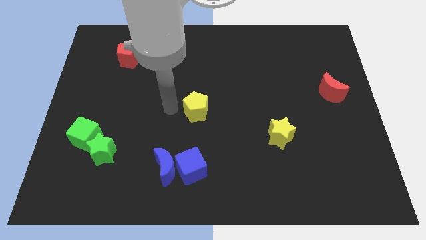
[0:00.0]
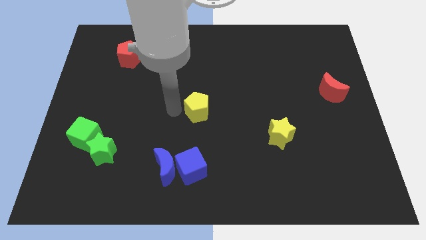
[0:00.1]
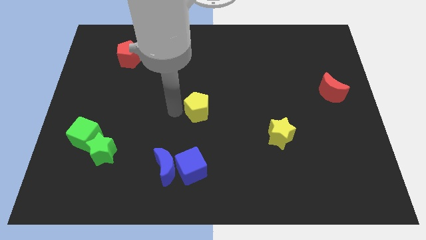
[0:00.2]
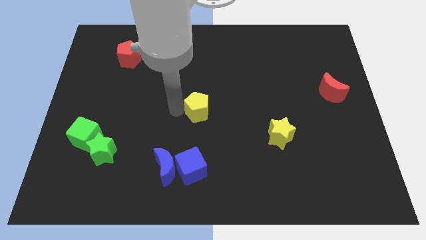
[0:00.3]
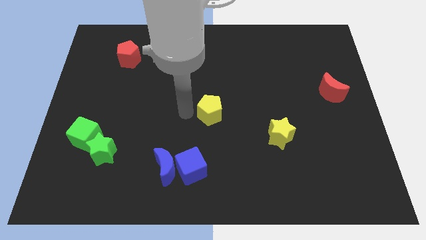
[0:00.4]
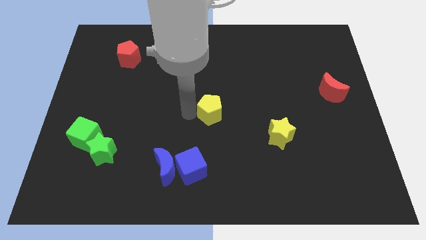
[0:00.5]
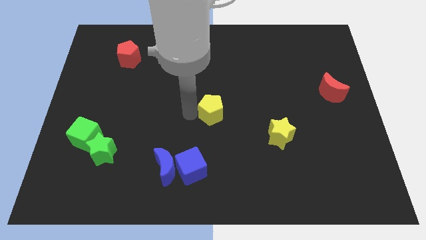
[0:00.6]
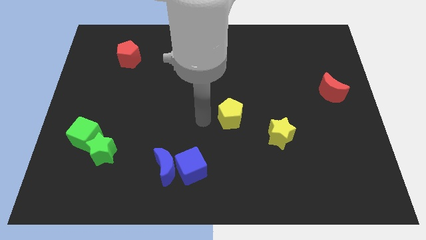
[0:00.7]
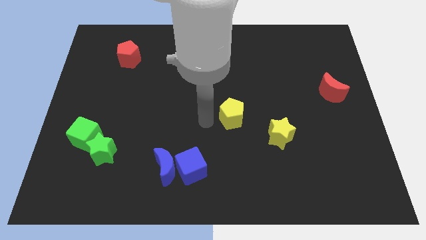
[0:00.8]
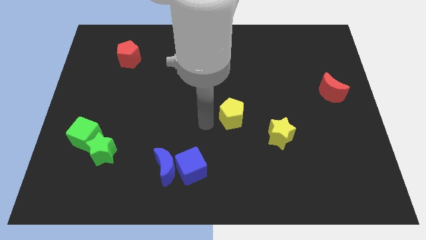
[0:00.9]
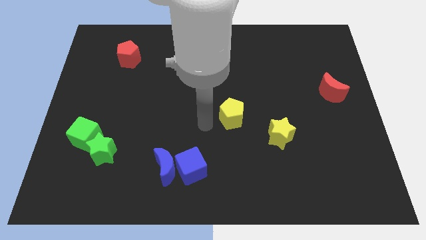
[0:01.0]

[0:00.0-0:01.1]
slide yellow pentagon towards yellow star

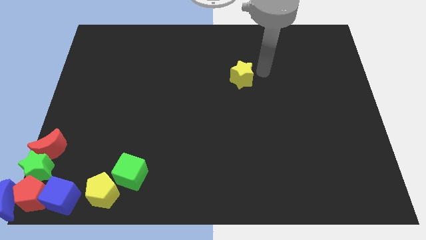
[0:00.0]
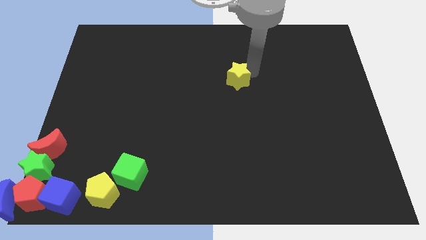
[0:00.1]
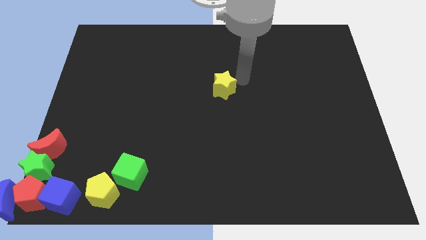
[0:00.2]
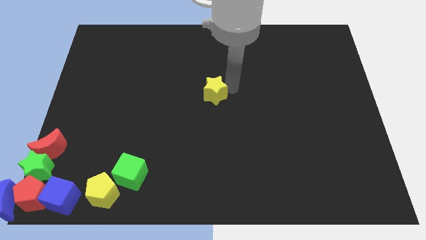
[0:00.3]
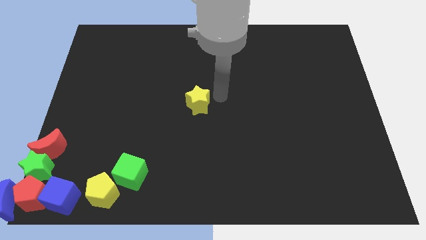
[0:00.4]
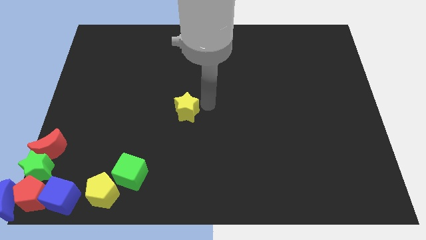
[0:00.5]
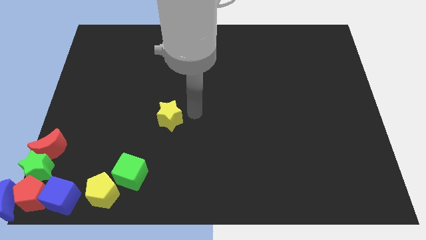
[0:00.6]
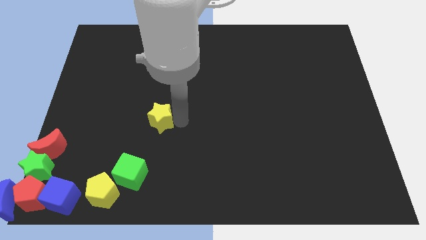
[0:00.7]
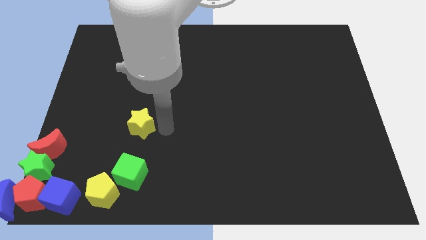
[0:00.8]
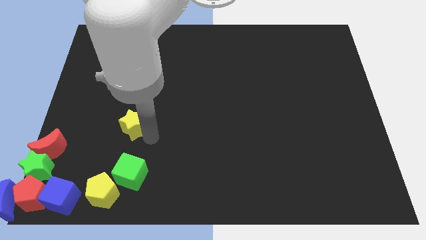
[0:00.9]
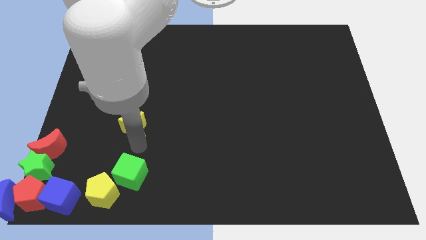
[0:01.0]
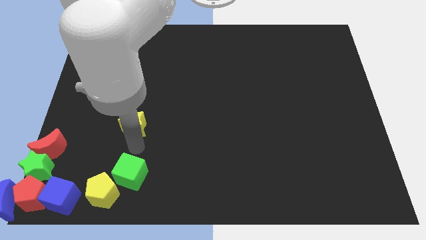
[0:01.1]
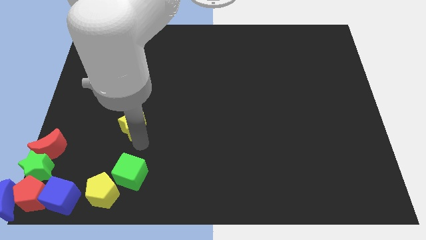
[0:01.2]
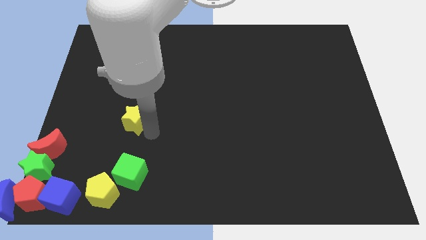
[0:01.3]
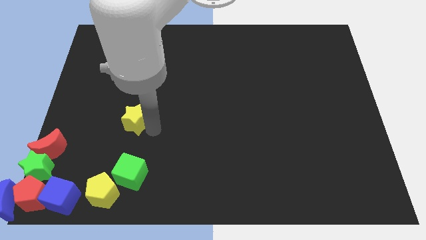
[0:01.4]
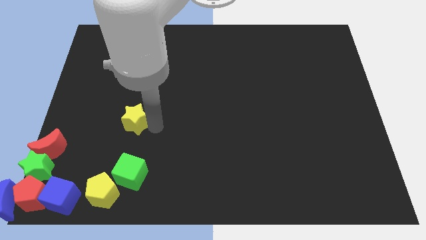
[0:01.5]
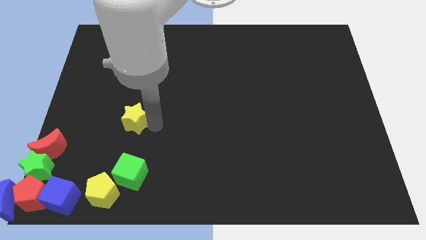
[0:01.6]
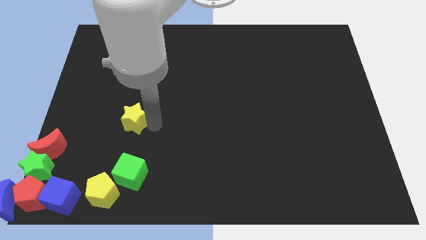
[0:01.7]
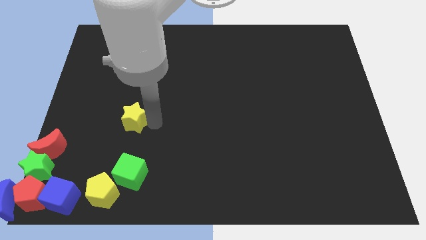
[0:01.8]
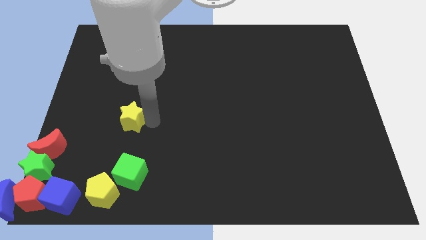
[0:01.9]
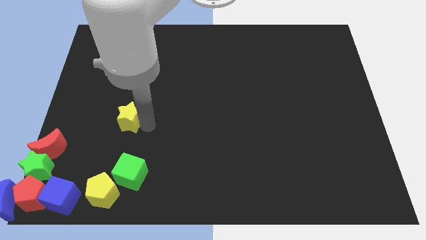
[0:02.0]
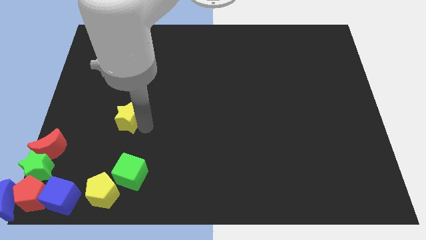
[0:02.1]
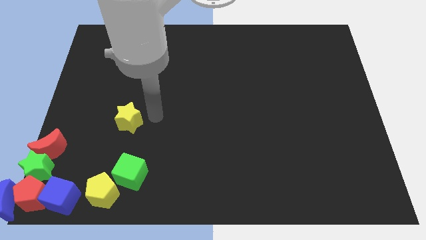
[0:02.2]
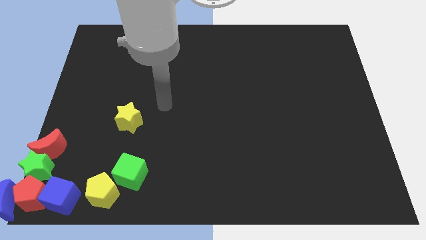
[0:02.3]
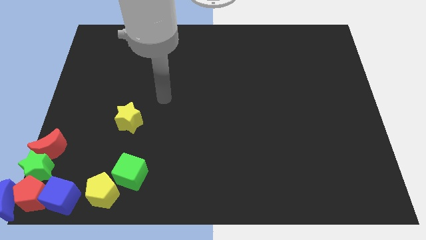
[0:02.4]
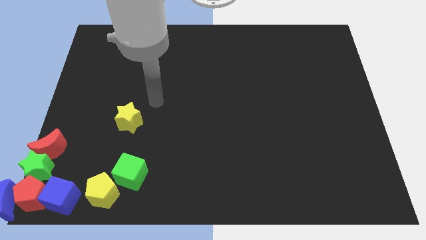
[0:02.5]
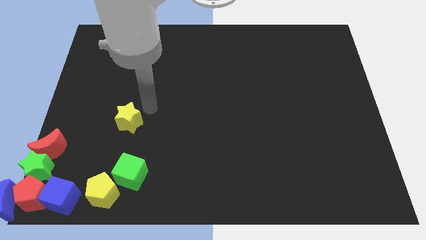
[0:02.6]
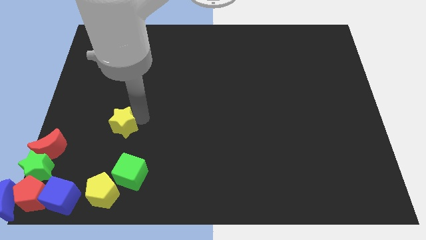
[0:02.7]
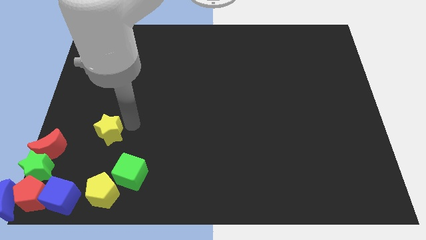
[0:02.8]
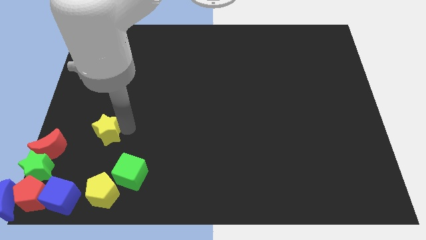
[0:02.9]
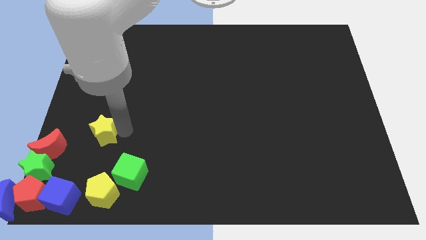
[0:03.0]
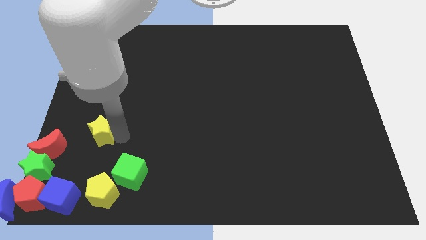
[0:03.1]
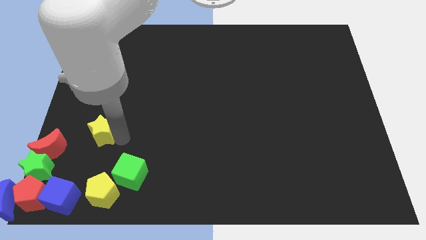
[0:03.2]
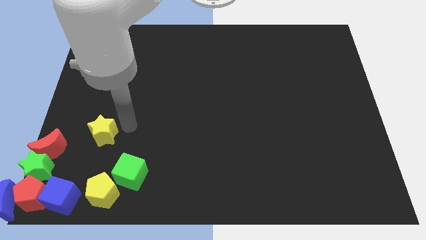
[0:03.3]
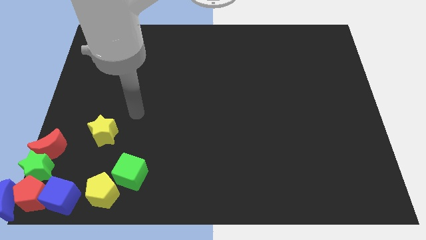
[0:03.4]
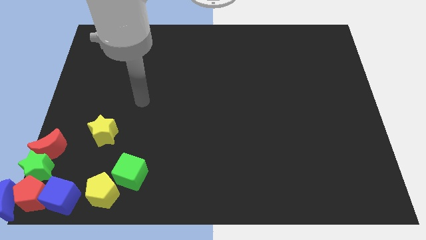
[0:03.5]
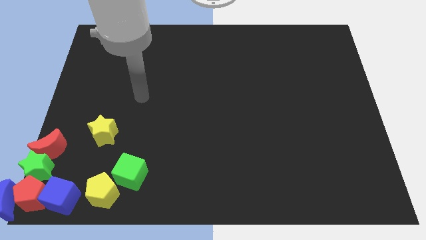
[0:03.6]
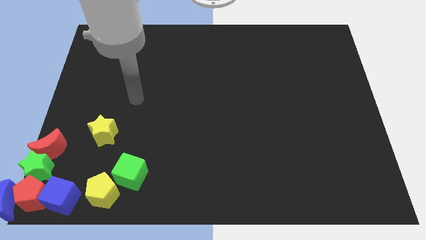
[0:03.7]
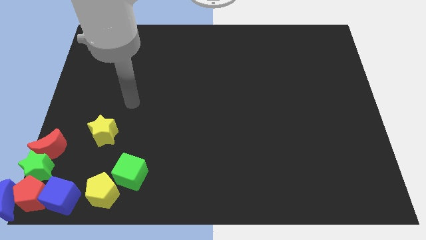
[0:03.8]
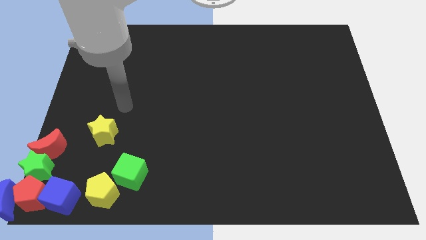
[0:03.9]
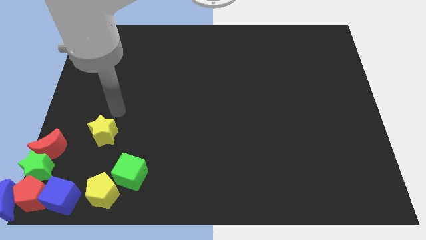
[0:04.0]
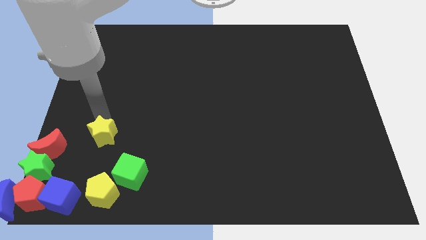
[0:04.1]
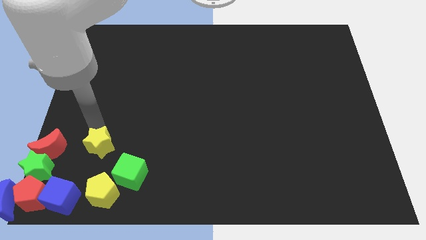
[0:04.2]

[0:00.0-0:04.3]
put the yellow star to the right of the red moon

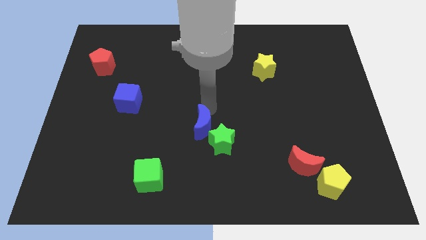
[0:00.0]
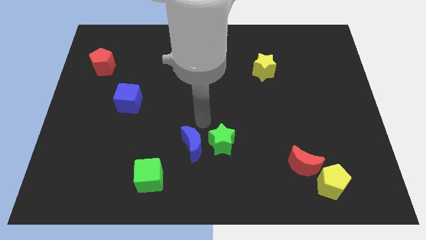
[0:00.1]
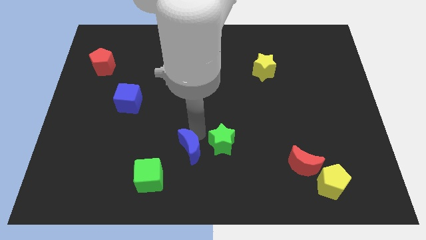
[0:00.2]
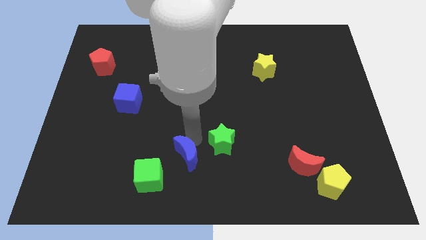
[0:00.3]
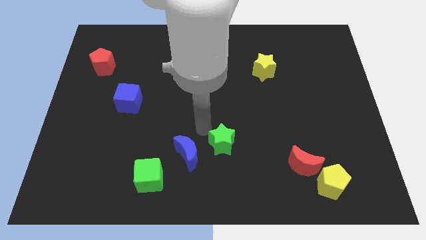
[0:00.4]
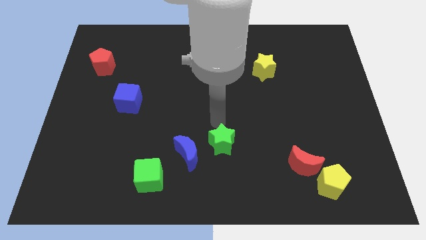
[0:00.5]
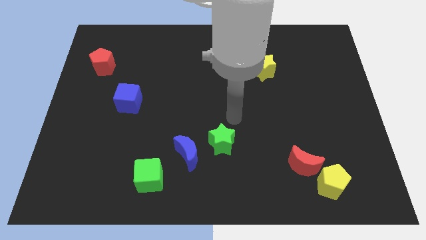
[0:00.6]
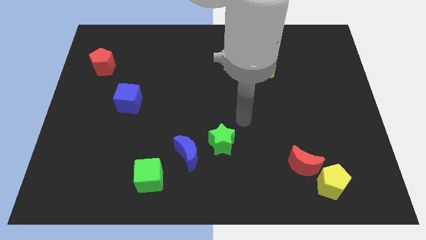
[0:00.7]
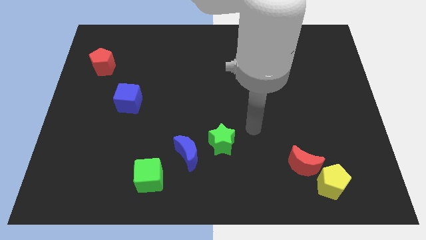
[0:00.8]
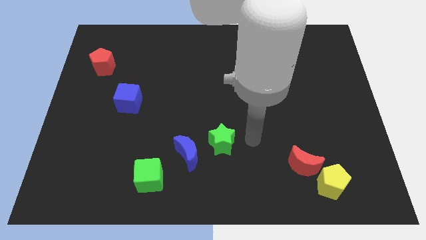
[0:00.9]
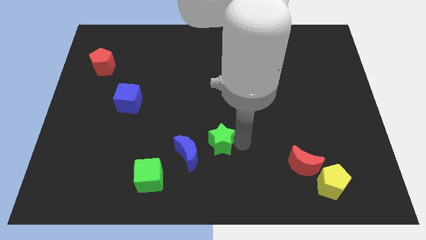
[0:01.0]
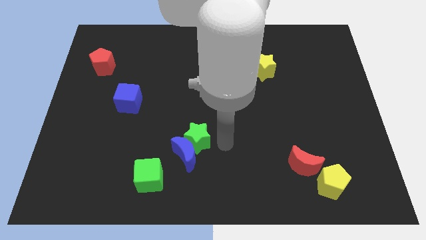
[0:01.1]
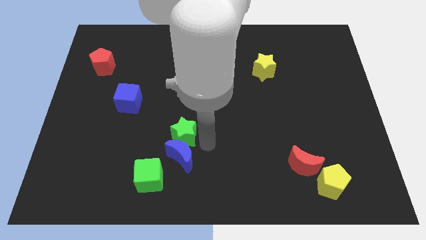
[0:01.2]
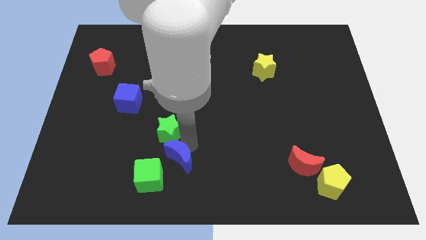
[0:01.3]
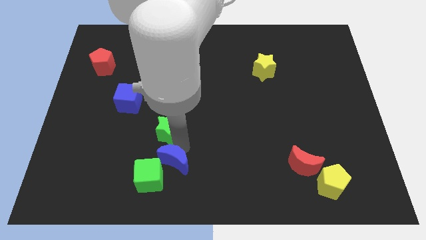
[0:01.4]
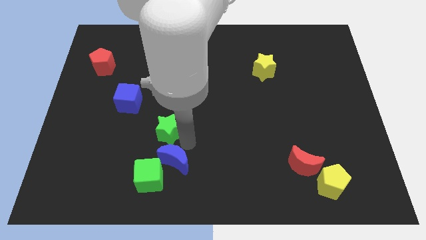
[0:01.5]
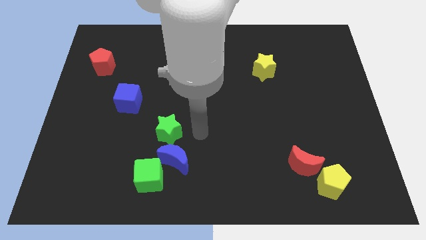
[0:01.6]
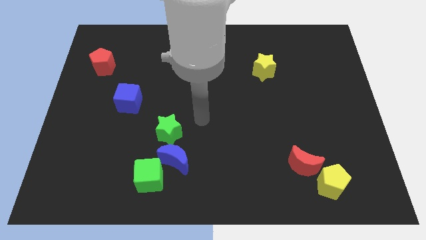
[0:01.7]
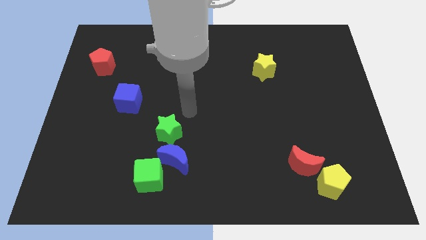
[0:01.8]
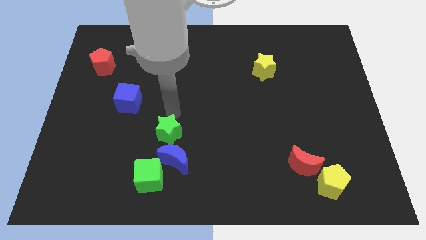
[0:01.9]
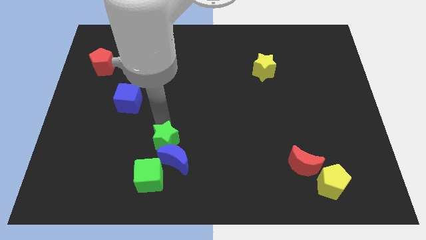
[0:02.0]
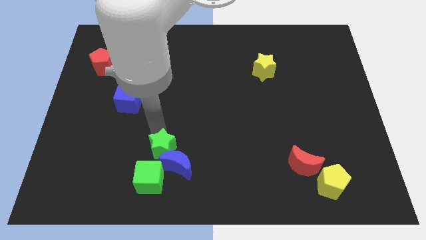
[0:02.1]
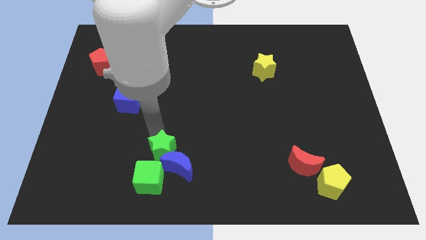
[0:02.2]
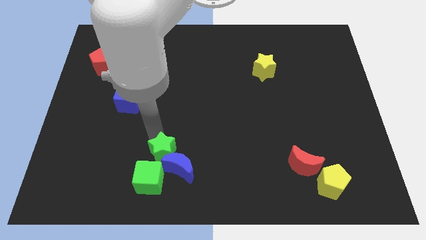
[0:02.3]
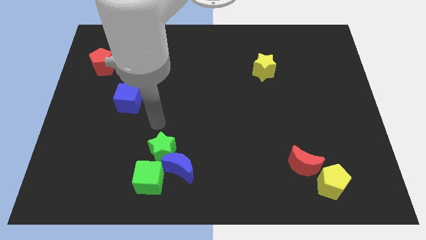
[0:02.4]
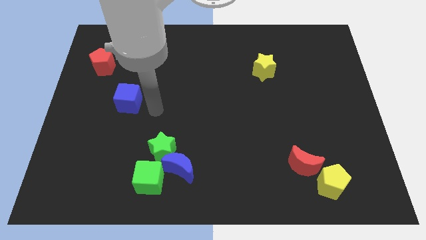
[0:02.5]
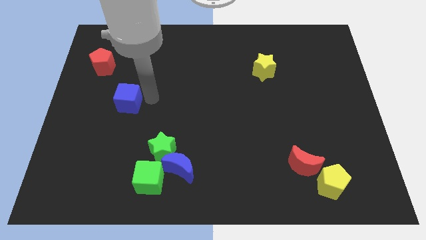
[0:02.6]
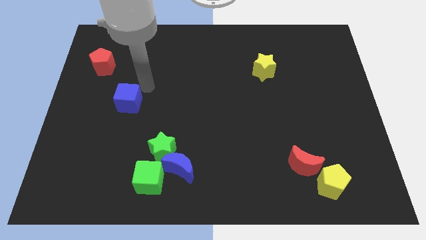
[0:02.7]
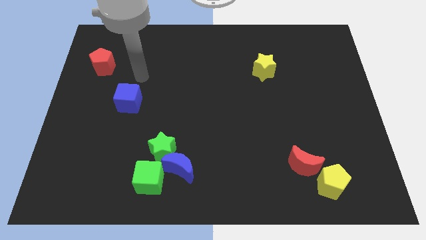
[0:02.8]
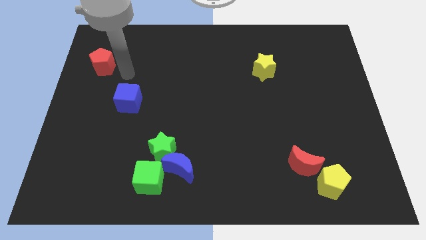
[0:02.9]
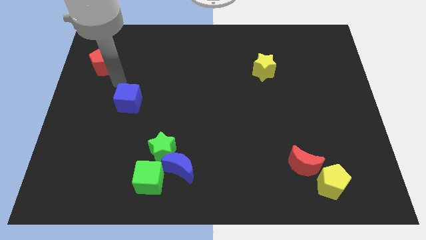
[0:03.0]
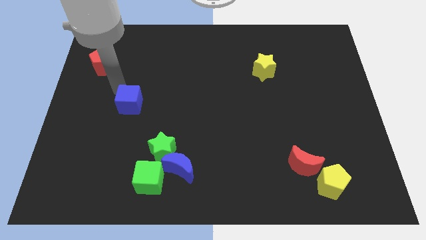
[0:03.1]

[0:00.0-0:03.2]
push the green star and blue crescent into the green cube

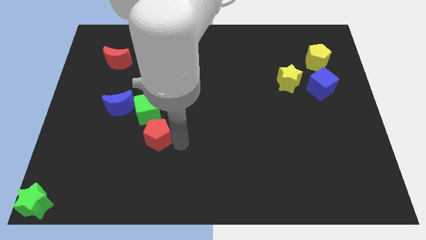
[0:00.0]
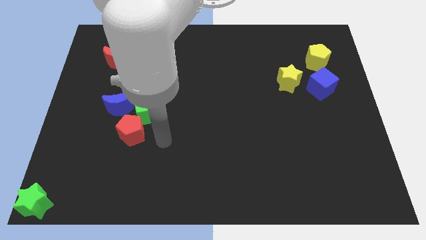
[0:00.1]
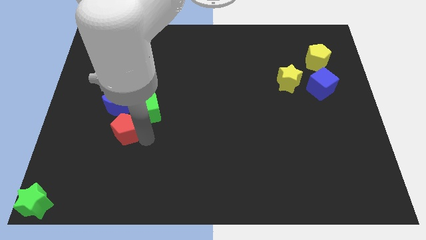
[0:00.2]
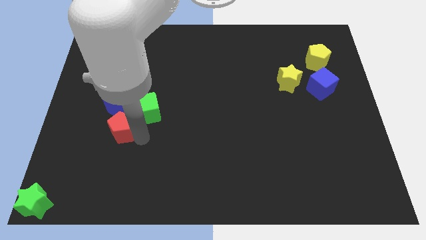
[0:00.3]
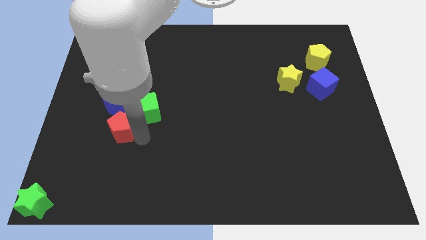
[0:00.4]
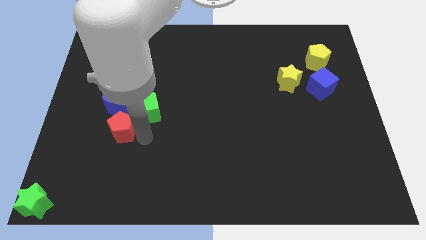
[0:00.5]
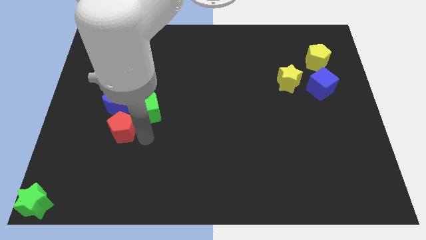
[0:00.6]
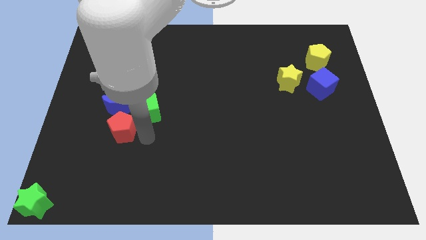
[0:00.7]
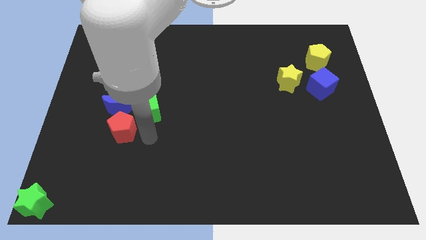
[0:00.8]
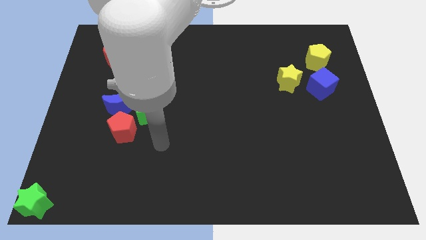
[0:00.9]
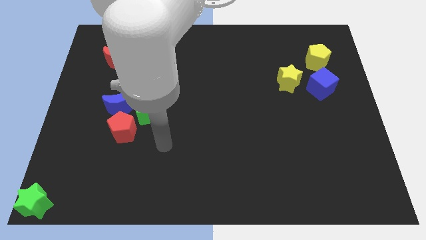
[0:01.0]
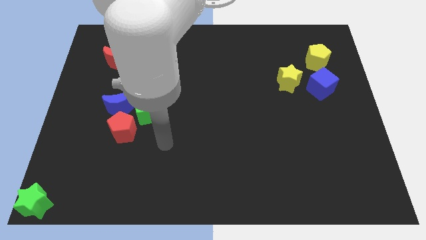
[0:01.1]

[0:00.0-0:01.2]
slightly push the red pentagon to the bottom of the blue crescent
